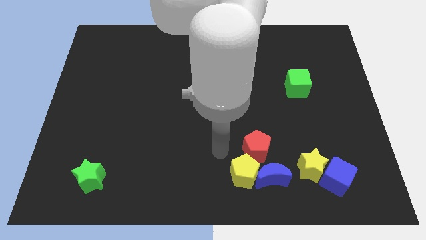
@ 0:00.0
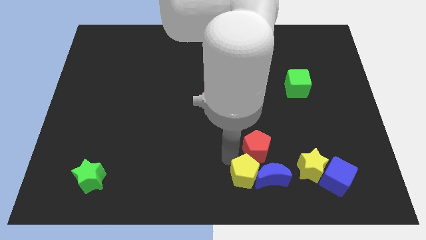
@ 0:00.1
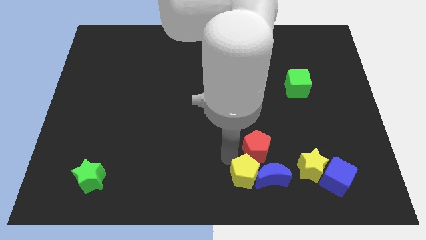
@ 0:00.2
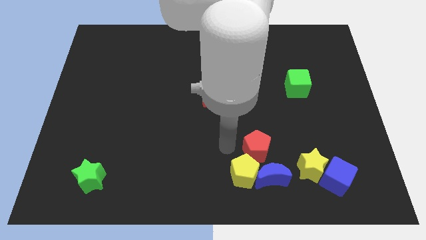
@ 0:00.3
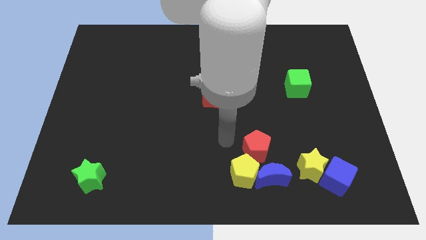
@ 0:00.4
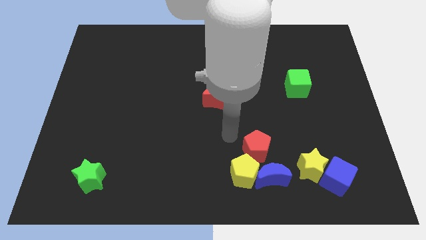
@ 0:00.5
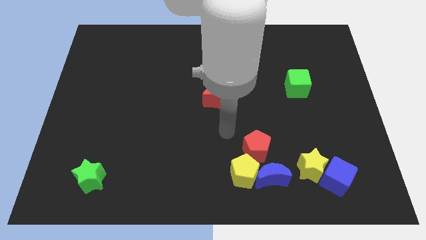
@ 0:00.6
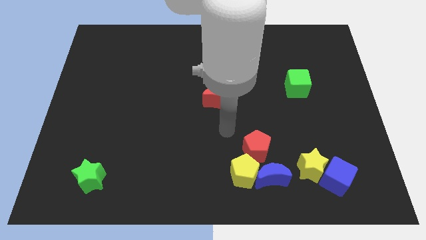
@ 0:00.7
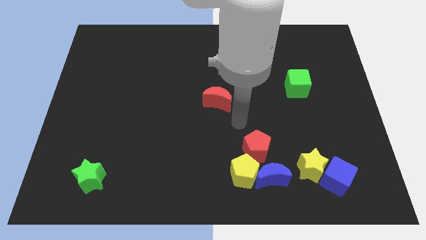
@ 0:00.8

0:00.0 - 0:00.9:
put your arm in between the red crescent and red pentagon

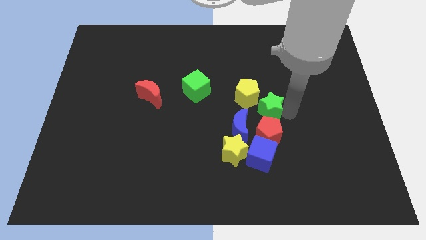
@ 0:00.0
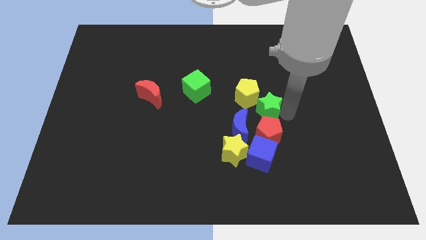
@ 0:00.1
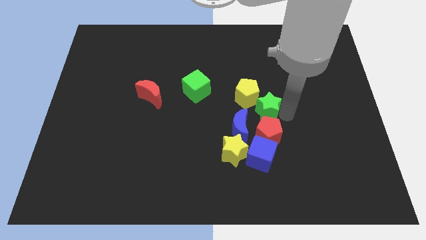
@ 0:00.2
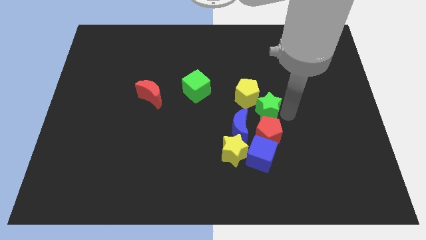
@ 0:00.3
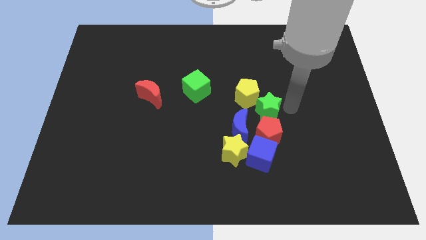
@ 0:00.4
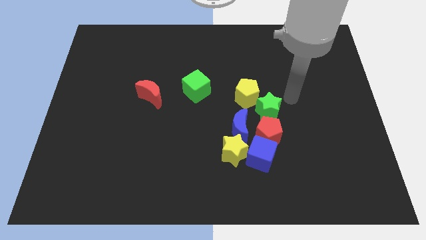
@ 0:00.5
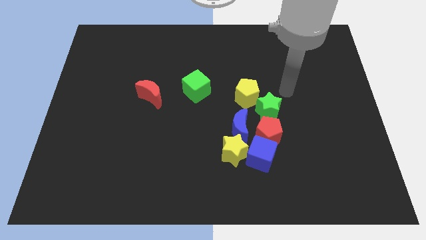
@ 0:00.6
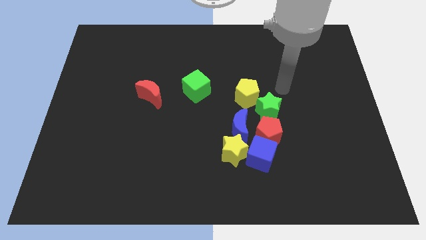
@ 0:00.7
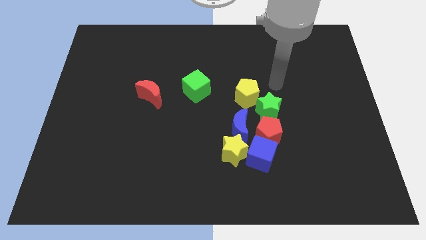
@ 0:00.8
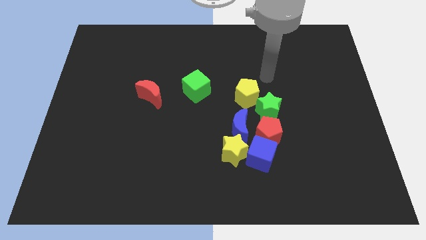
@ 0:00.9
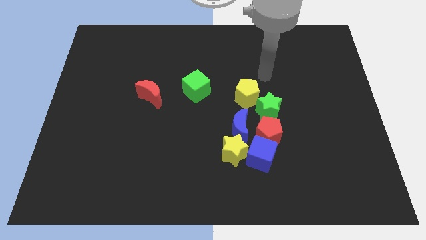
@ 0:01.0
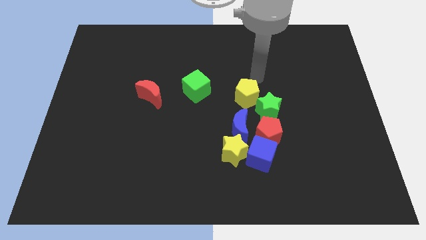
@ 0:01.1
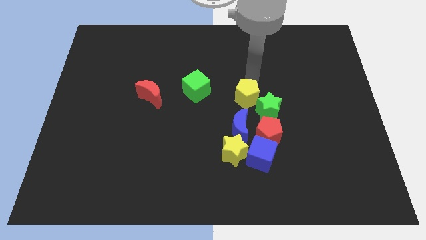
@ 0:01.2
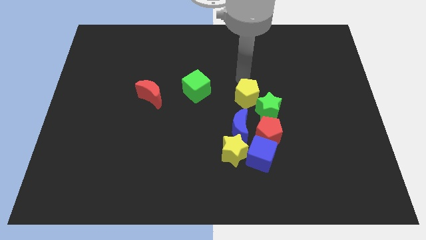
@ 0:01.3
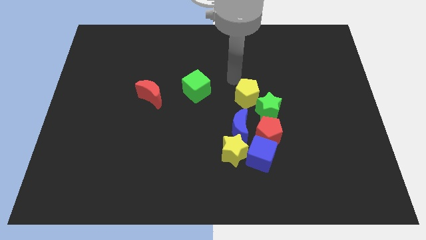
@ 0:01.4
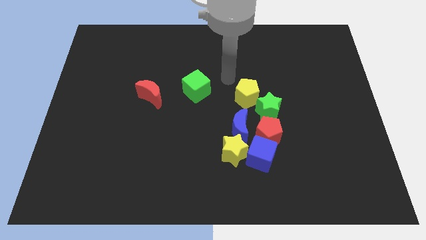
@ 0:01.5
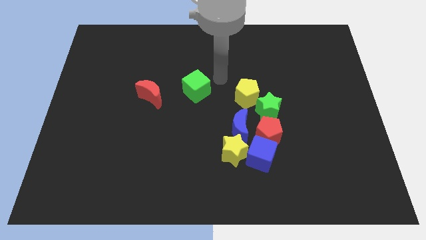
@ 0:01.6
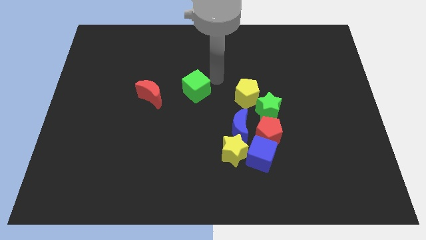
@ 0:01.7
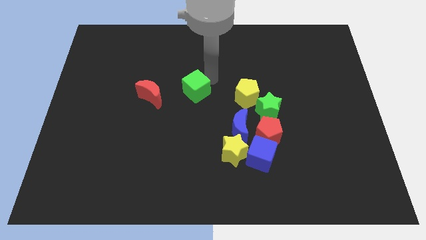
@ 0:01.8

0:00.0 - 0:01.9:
adjust the green star into the red pentagon from the top

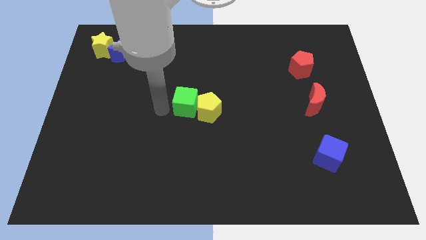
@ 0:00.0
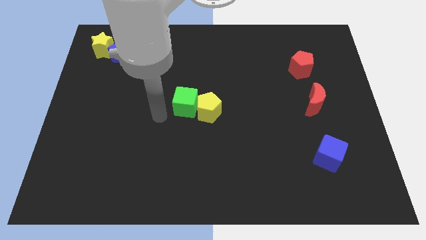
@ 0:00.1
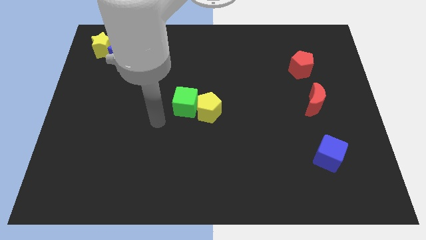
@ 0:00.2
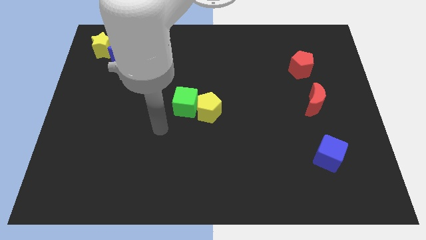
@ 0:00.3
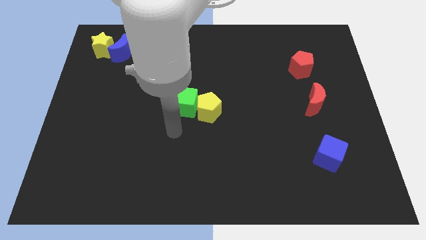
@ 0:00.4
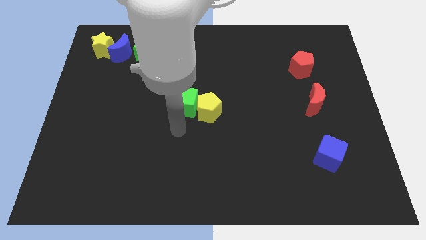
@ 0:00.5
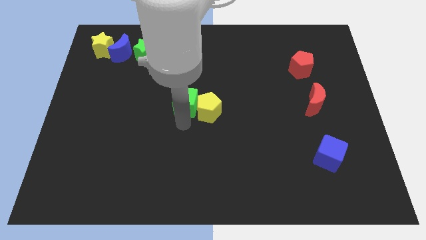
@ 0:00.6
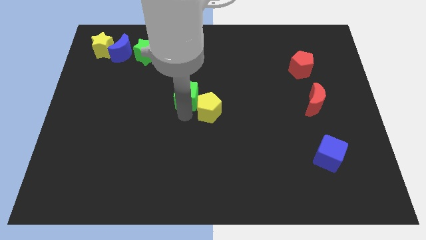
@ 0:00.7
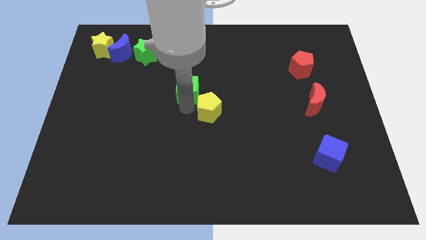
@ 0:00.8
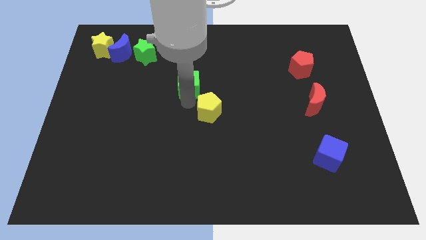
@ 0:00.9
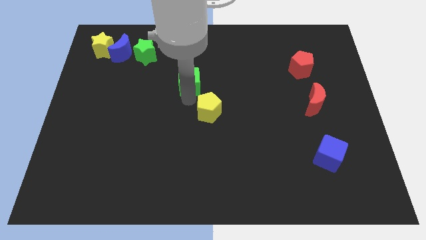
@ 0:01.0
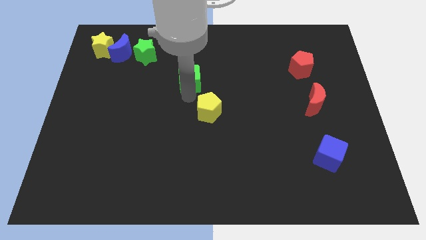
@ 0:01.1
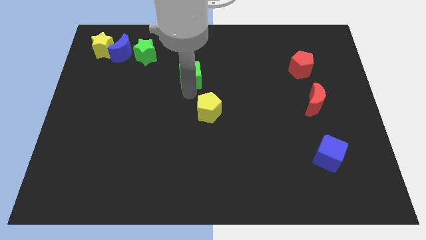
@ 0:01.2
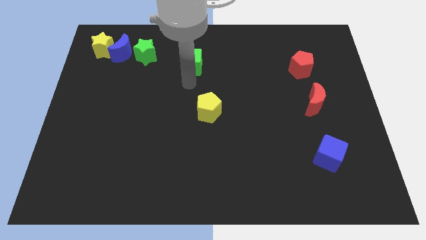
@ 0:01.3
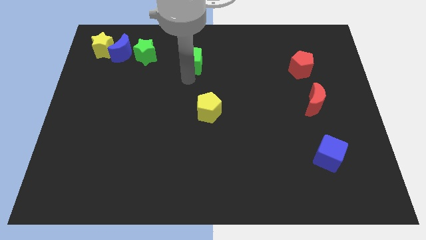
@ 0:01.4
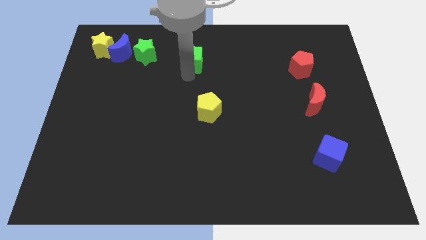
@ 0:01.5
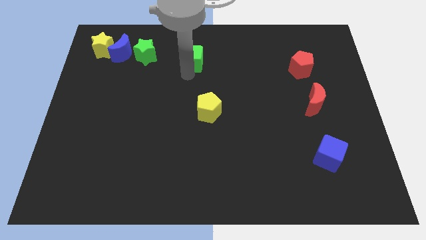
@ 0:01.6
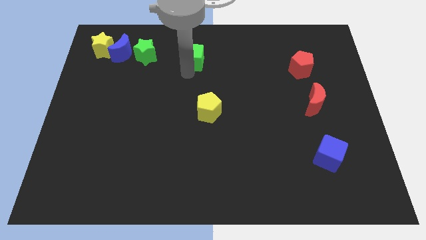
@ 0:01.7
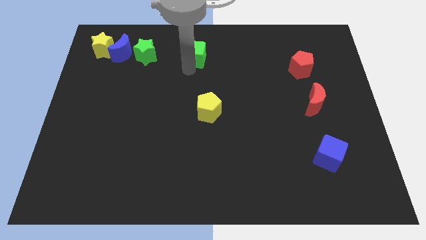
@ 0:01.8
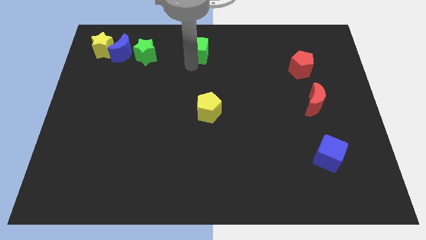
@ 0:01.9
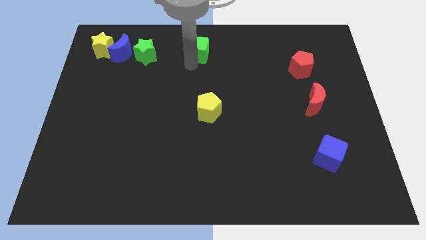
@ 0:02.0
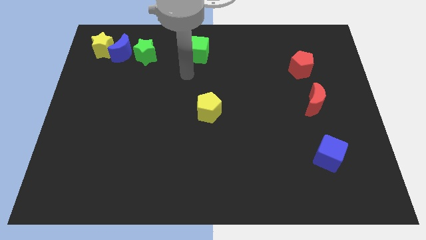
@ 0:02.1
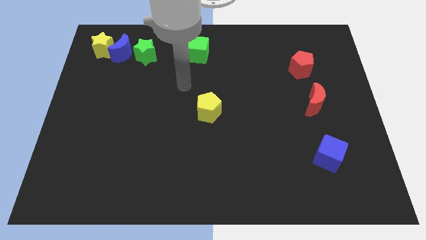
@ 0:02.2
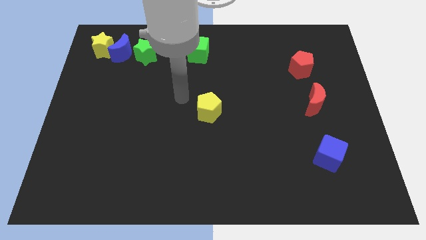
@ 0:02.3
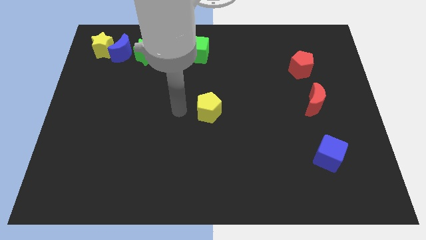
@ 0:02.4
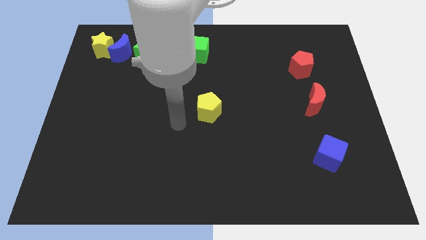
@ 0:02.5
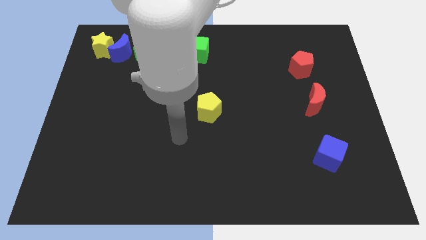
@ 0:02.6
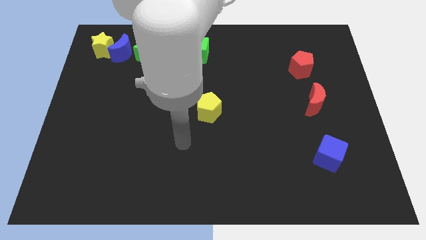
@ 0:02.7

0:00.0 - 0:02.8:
move the green cube to the top center of the board

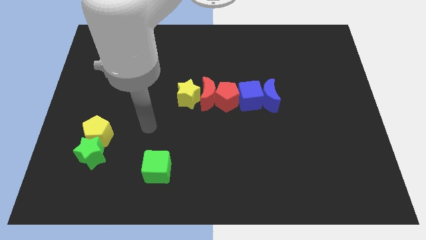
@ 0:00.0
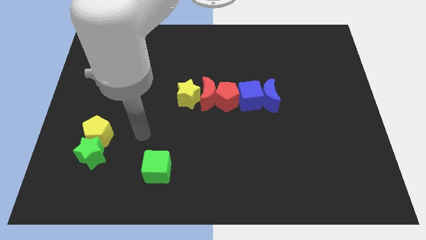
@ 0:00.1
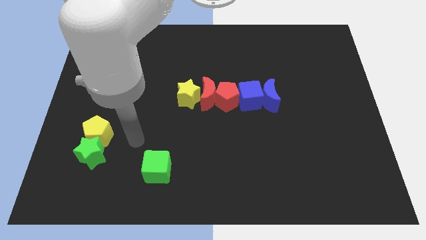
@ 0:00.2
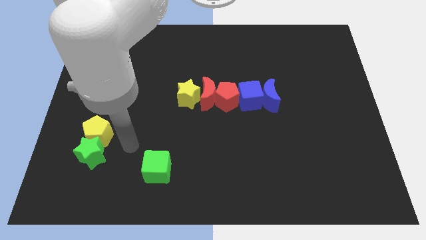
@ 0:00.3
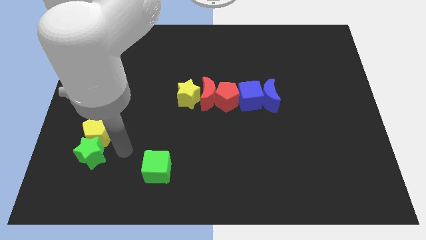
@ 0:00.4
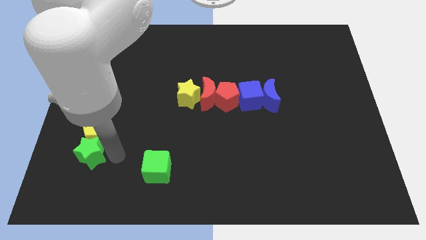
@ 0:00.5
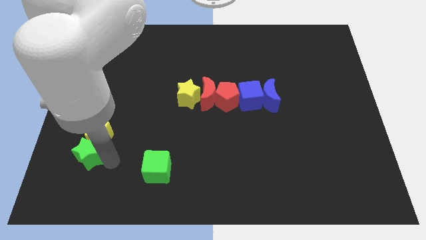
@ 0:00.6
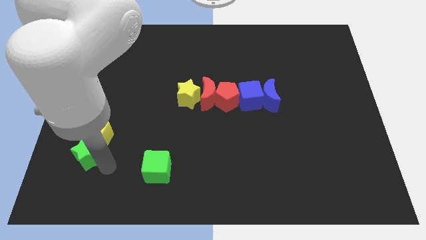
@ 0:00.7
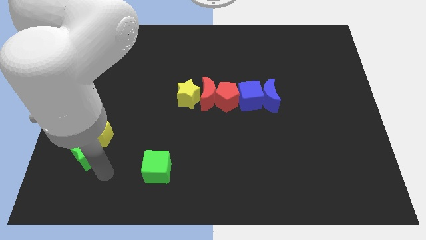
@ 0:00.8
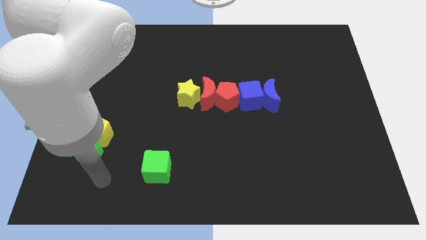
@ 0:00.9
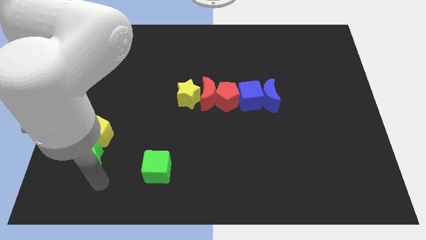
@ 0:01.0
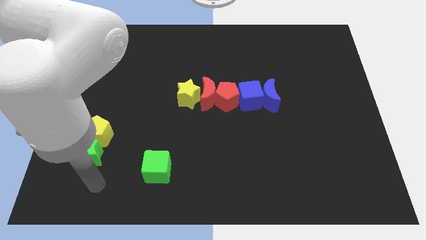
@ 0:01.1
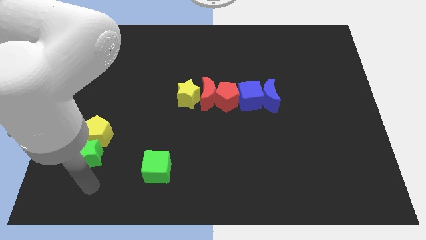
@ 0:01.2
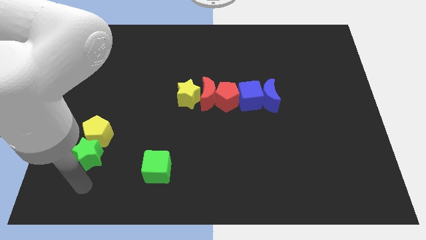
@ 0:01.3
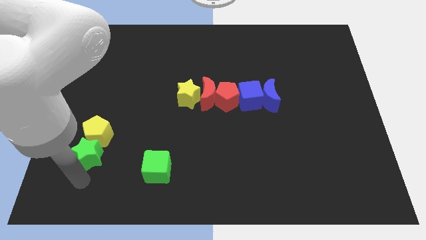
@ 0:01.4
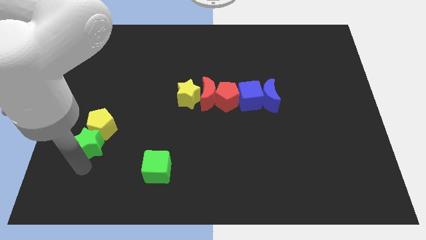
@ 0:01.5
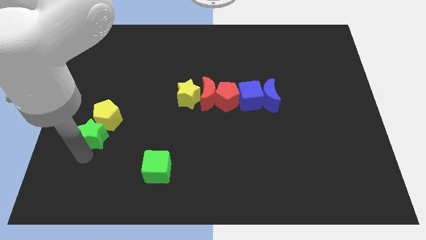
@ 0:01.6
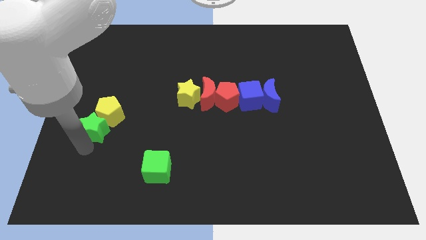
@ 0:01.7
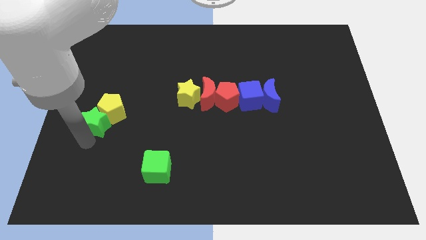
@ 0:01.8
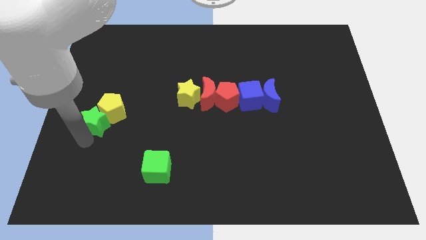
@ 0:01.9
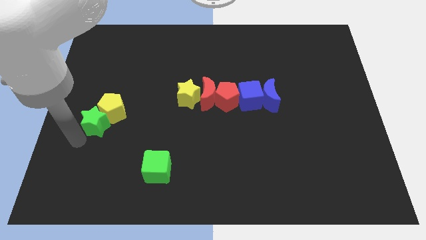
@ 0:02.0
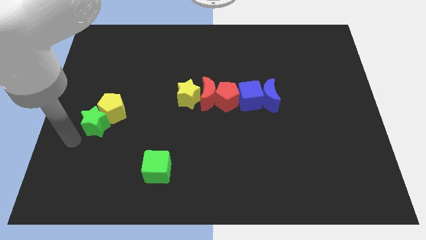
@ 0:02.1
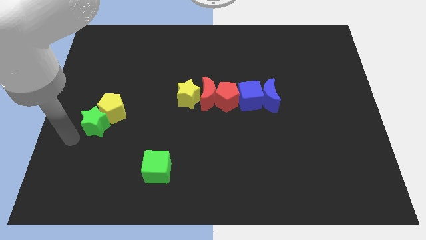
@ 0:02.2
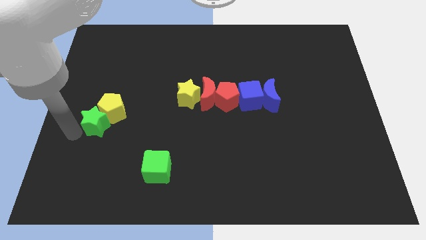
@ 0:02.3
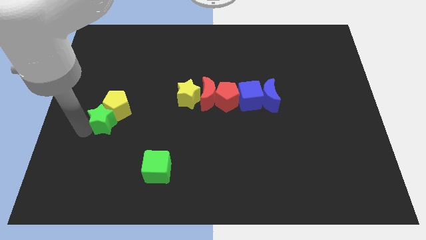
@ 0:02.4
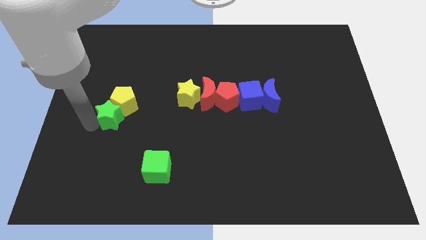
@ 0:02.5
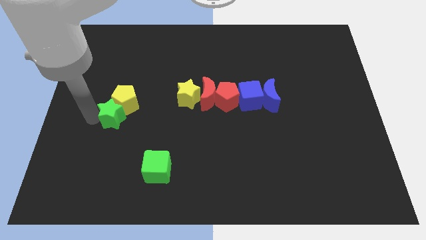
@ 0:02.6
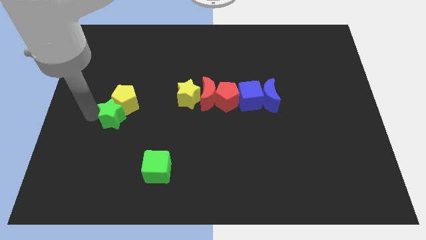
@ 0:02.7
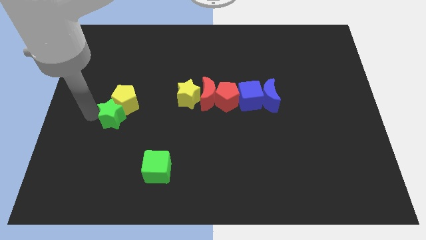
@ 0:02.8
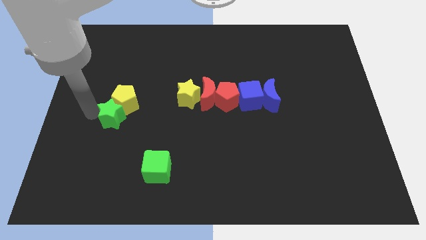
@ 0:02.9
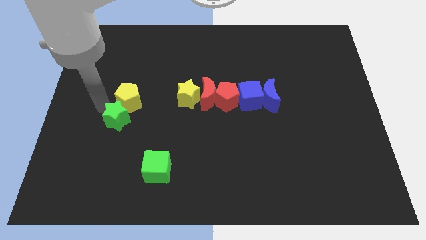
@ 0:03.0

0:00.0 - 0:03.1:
push the green star along with yellow pentagon slightly towards top right

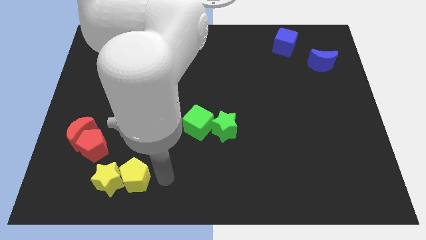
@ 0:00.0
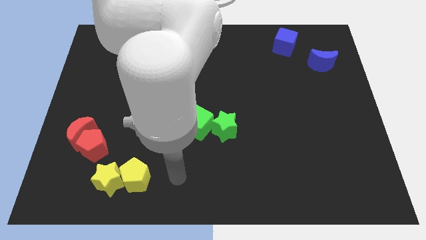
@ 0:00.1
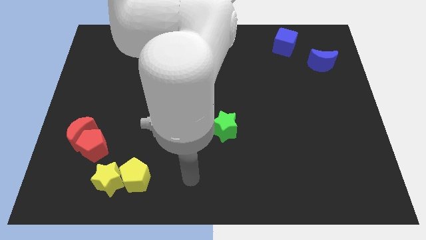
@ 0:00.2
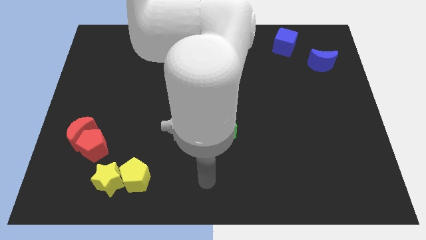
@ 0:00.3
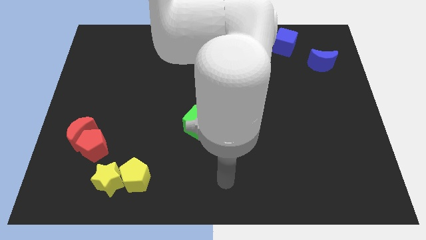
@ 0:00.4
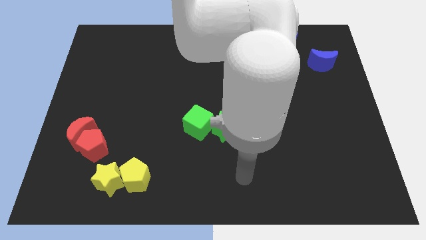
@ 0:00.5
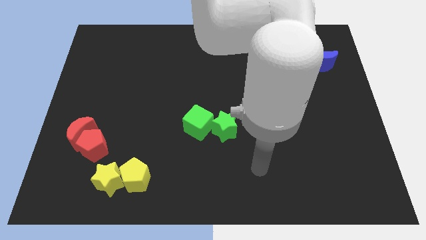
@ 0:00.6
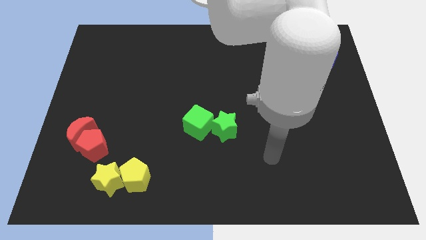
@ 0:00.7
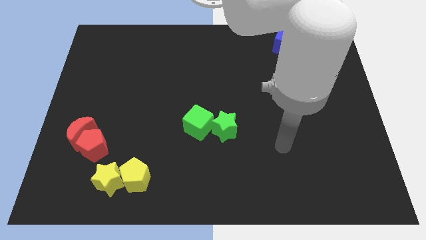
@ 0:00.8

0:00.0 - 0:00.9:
move your hand away from yellow pair of blocks
